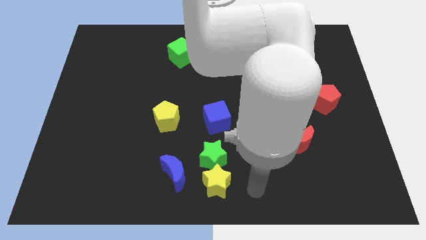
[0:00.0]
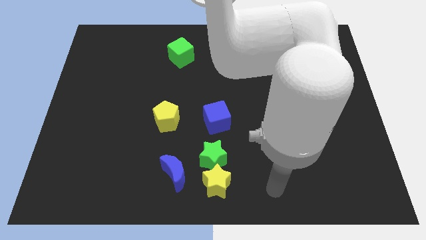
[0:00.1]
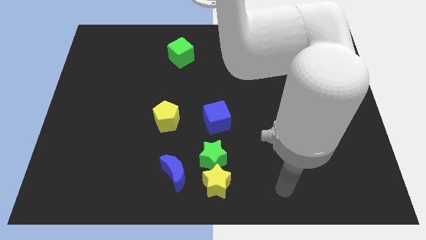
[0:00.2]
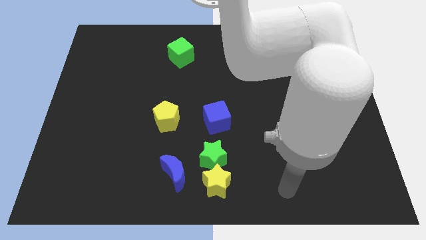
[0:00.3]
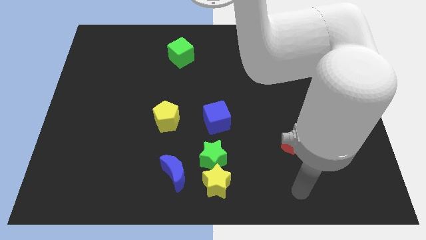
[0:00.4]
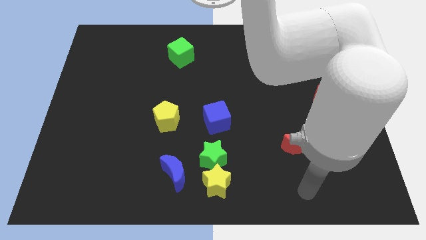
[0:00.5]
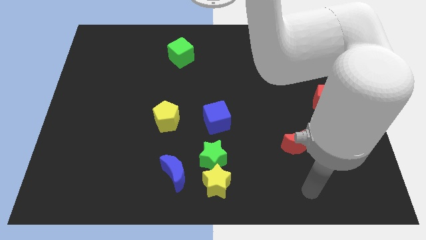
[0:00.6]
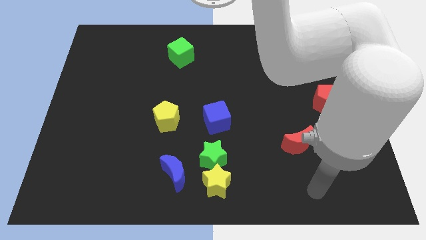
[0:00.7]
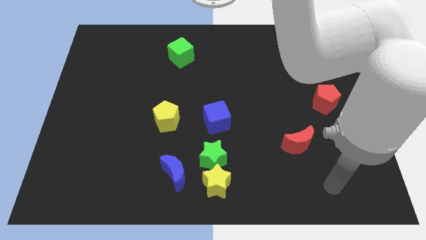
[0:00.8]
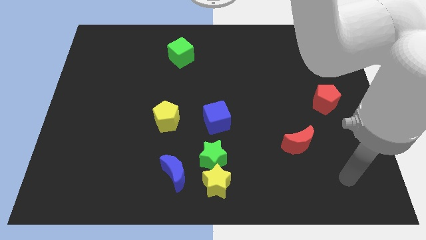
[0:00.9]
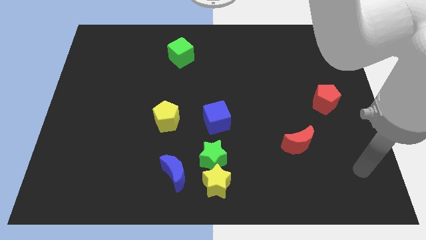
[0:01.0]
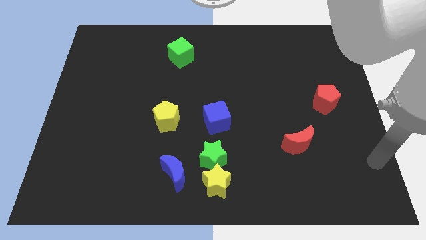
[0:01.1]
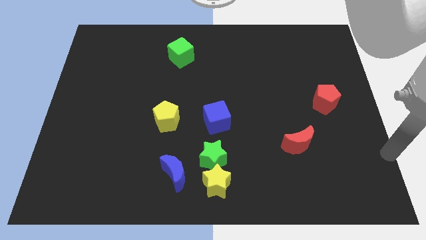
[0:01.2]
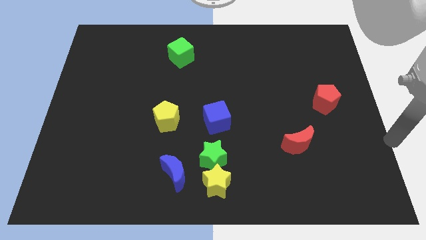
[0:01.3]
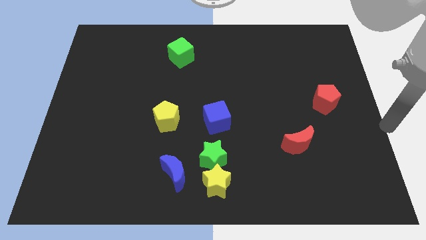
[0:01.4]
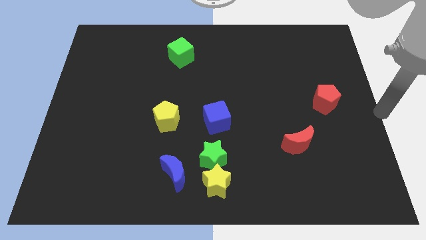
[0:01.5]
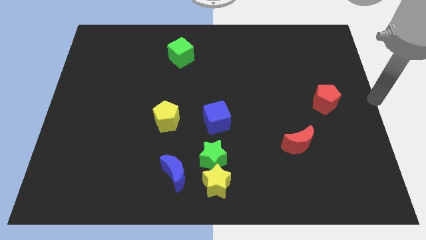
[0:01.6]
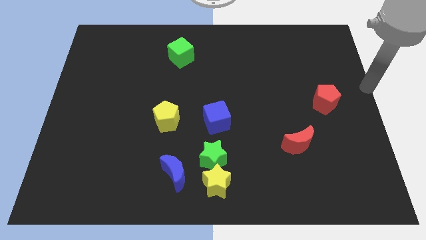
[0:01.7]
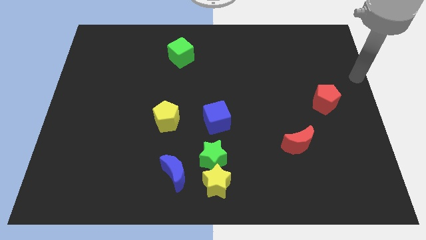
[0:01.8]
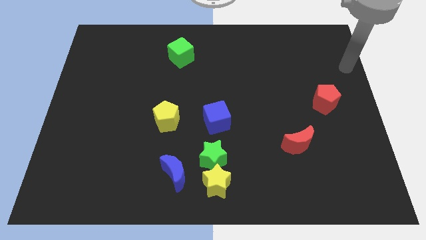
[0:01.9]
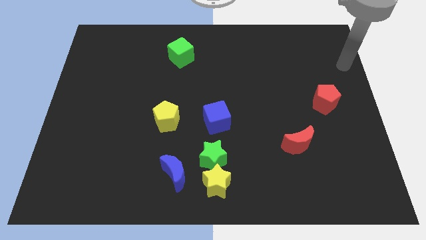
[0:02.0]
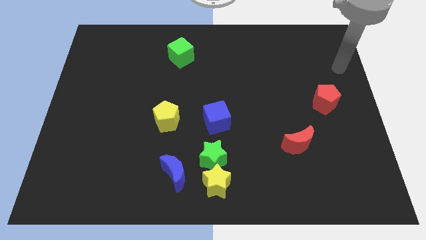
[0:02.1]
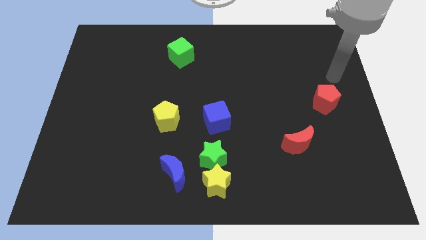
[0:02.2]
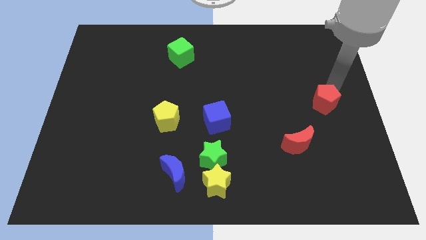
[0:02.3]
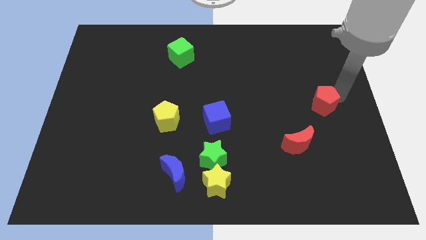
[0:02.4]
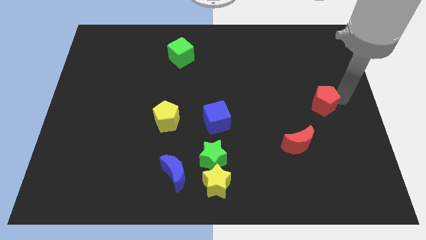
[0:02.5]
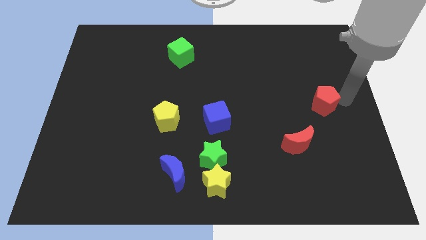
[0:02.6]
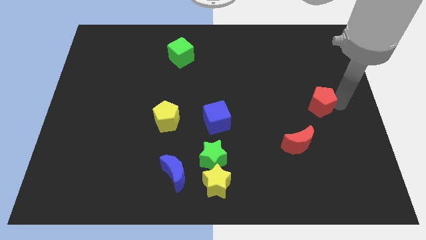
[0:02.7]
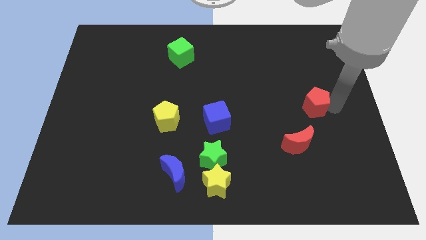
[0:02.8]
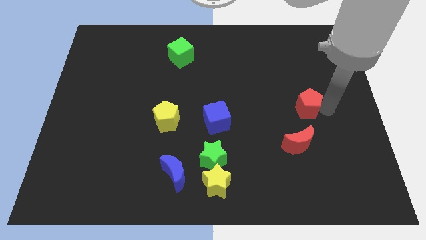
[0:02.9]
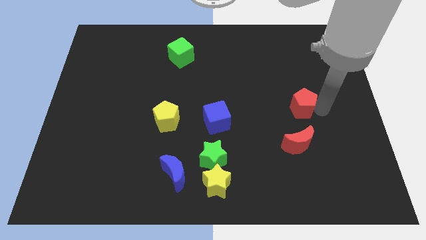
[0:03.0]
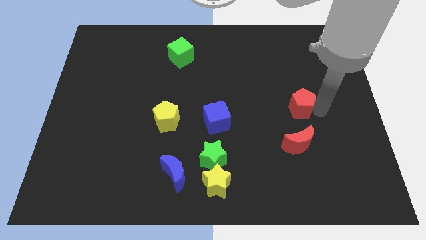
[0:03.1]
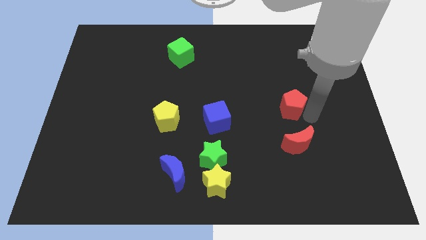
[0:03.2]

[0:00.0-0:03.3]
put the red pentagon above the red crescent

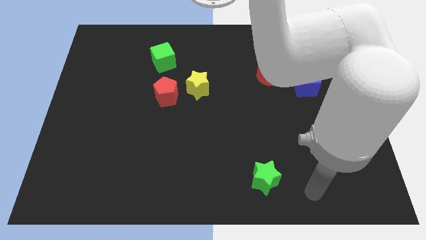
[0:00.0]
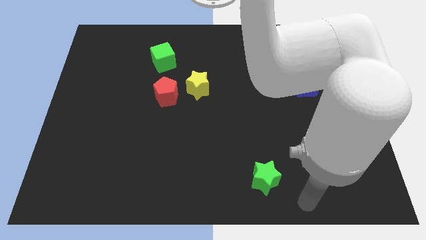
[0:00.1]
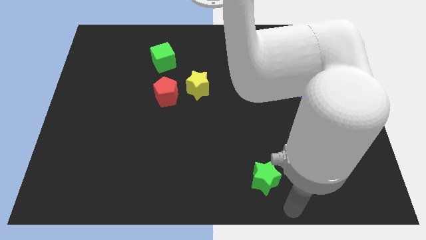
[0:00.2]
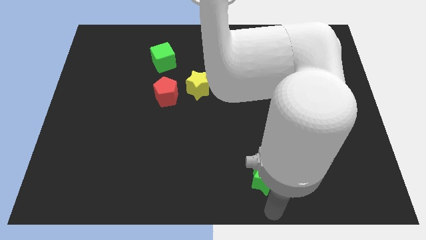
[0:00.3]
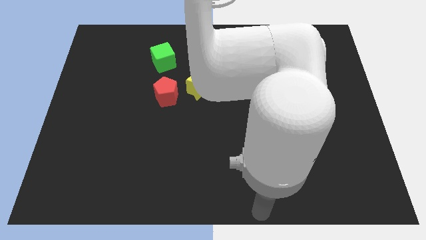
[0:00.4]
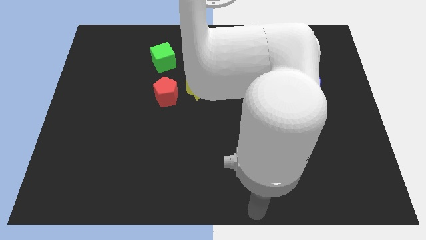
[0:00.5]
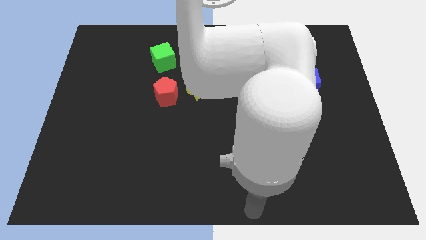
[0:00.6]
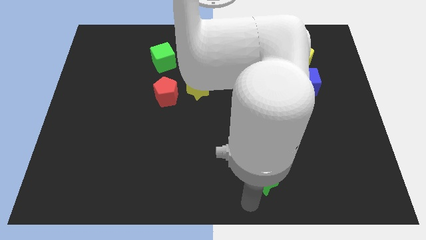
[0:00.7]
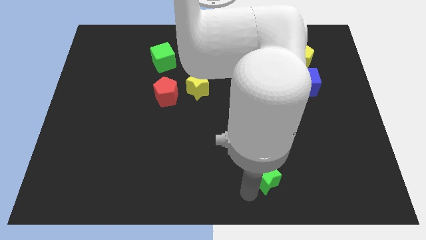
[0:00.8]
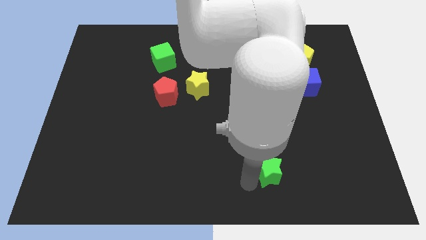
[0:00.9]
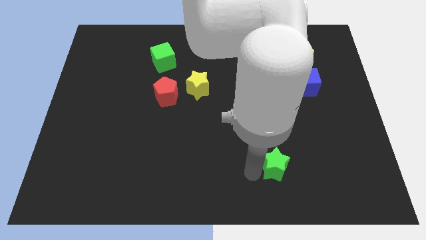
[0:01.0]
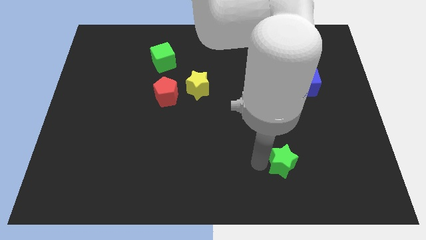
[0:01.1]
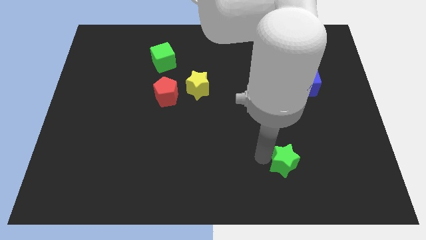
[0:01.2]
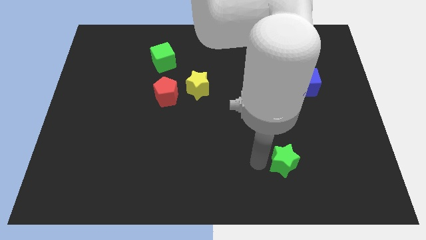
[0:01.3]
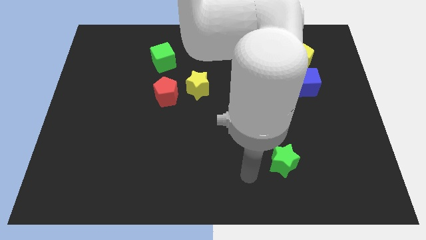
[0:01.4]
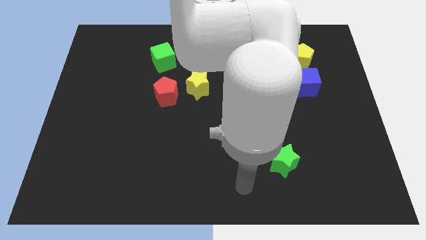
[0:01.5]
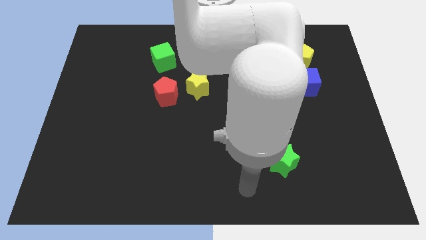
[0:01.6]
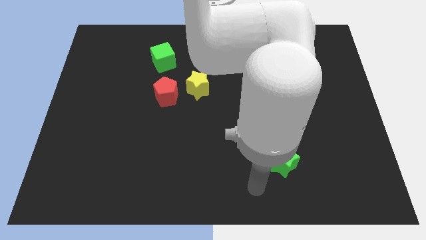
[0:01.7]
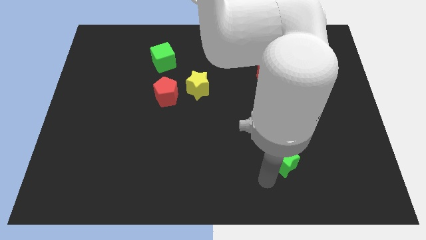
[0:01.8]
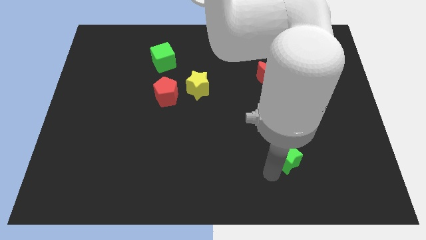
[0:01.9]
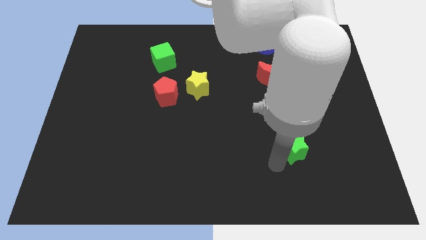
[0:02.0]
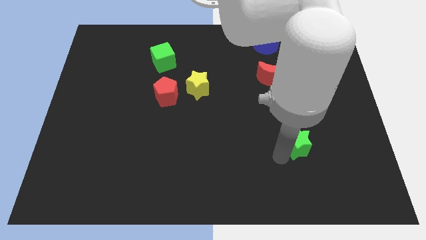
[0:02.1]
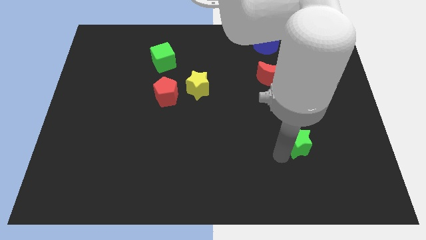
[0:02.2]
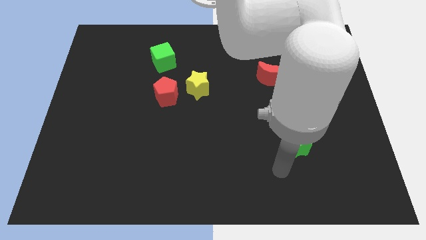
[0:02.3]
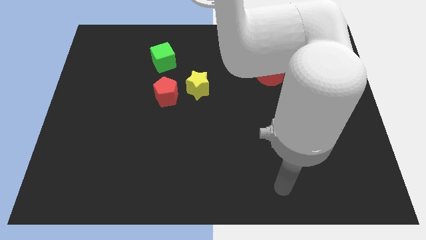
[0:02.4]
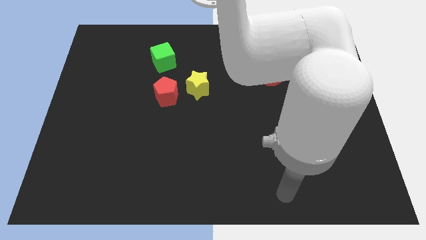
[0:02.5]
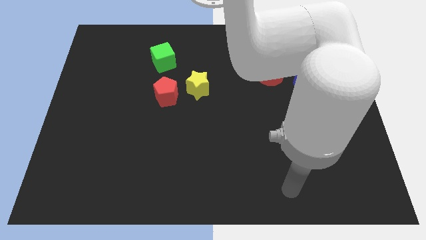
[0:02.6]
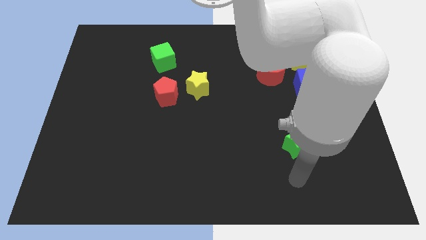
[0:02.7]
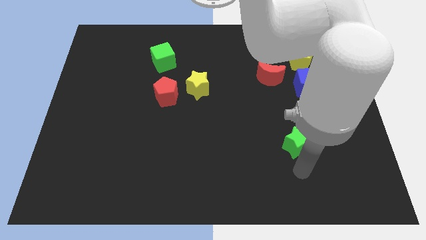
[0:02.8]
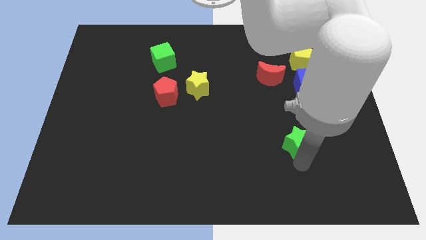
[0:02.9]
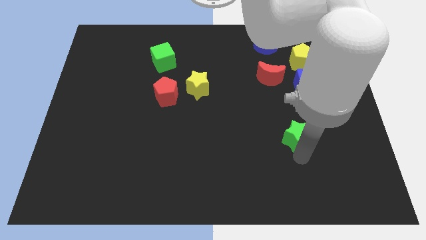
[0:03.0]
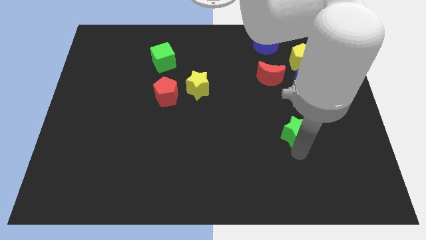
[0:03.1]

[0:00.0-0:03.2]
move the green star towards the top

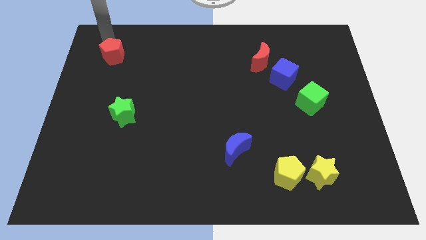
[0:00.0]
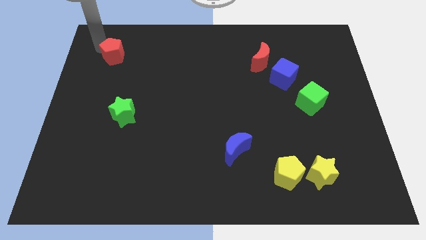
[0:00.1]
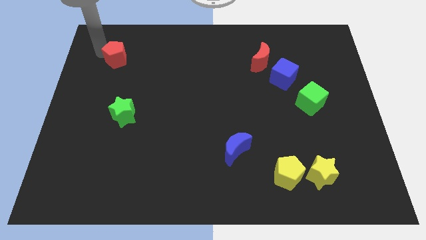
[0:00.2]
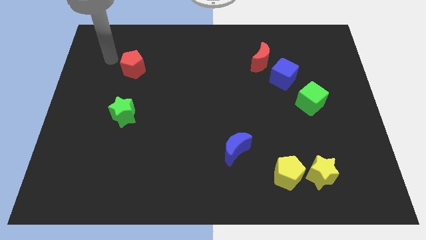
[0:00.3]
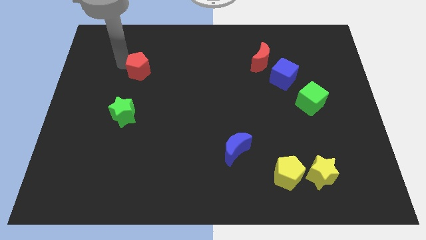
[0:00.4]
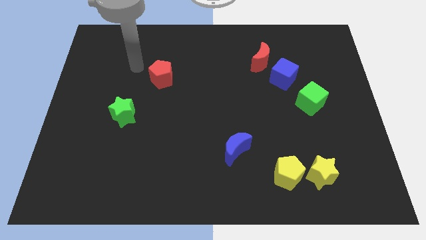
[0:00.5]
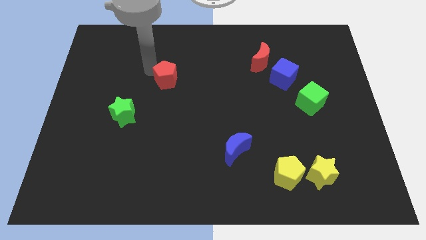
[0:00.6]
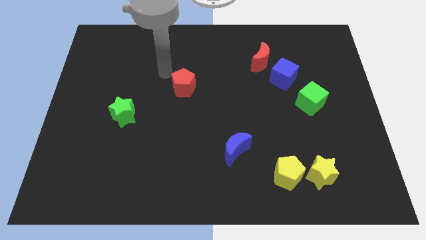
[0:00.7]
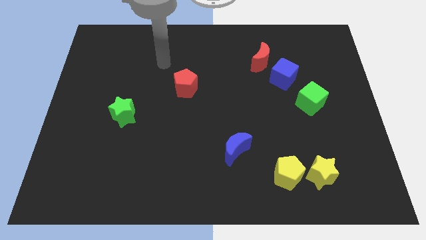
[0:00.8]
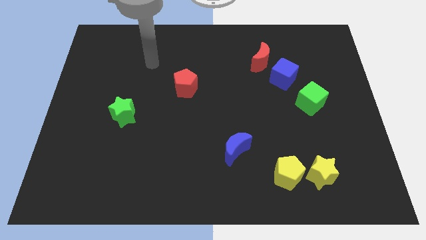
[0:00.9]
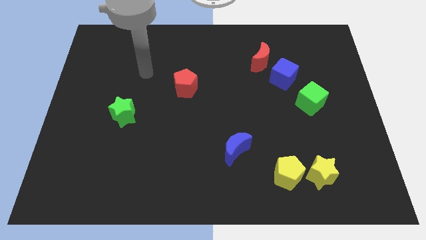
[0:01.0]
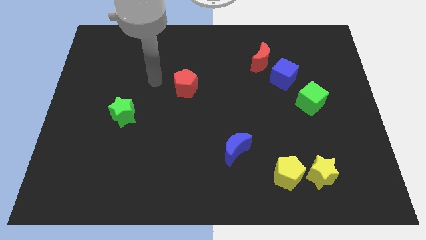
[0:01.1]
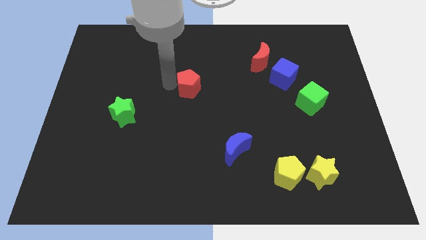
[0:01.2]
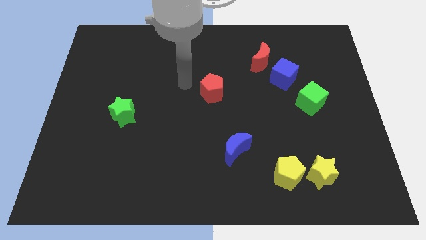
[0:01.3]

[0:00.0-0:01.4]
slide the red pentagon to the bottom left side of the red moon

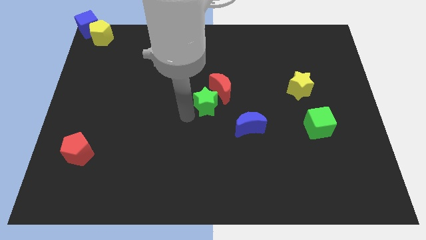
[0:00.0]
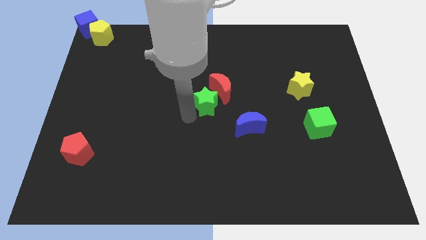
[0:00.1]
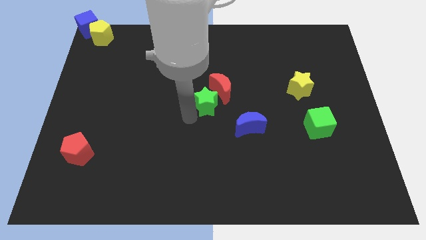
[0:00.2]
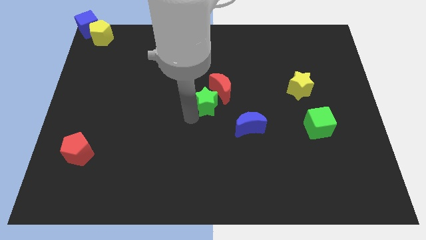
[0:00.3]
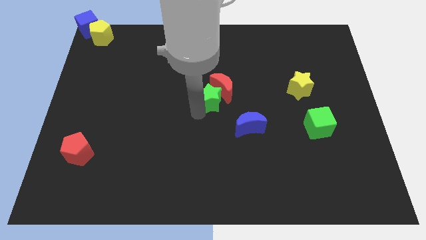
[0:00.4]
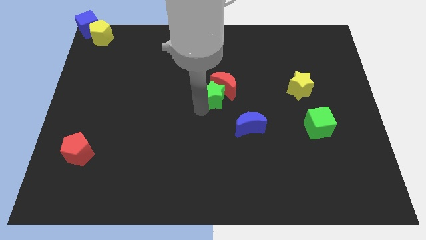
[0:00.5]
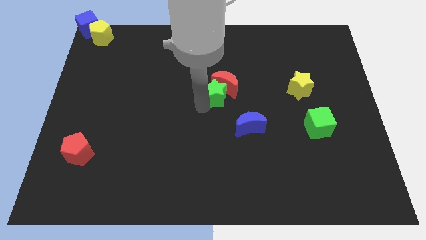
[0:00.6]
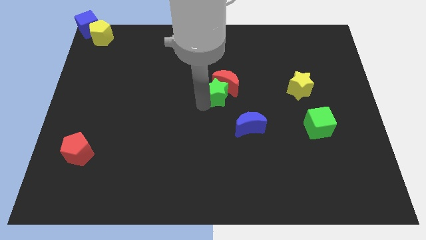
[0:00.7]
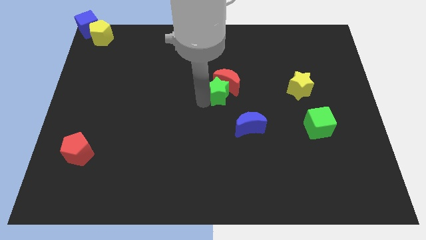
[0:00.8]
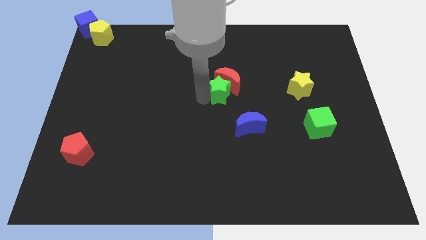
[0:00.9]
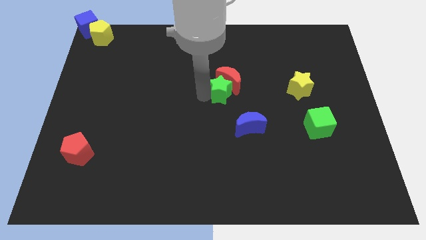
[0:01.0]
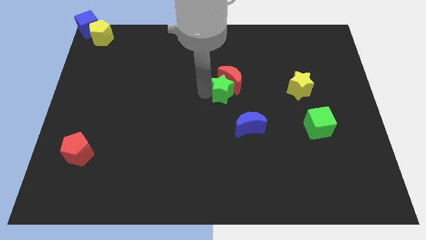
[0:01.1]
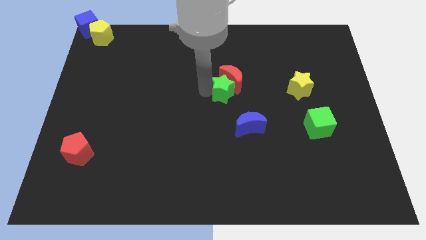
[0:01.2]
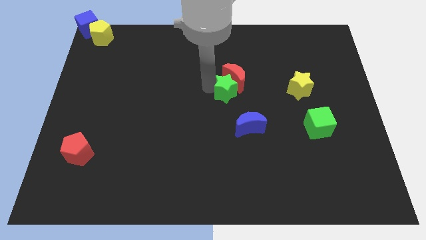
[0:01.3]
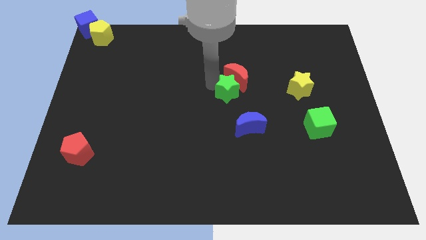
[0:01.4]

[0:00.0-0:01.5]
push the green star into the red crescent
